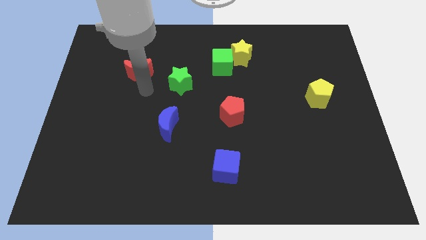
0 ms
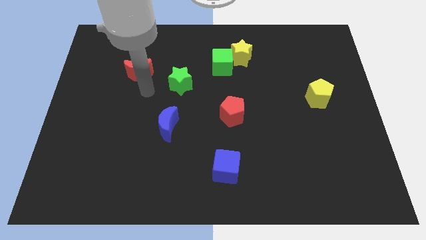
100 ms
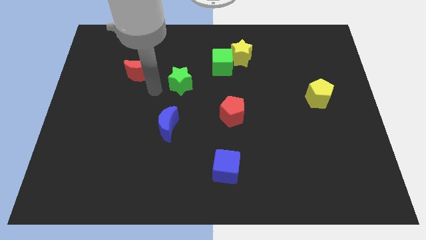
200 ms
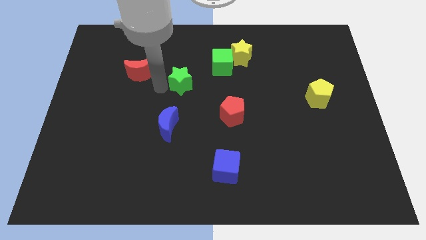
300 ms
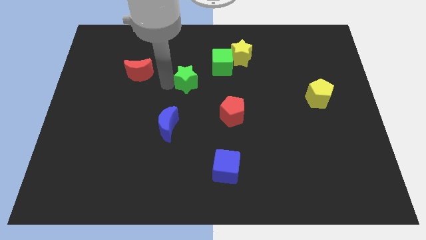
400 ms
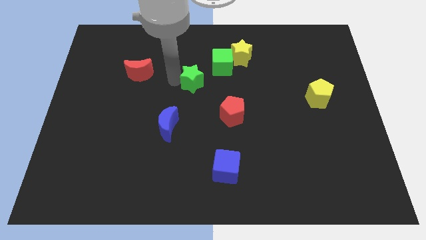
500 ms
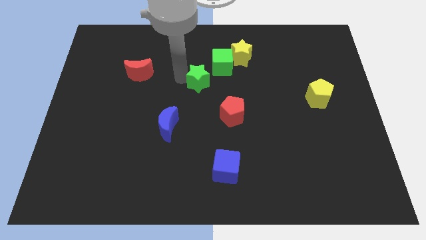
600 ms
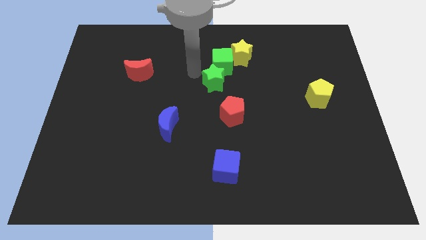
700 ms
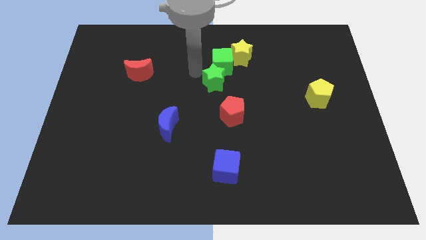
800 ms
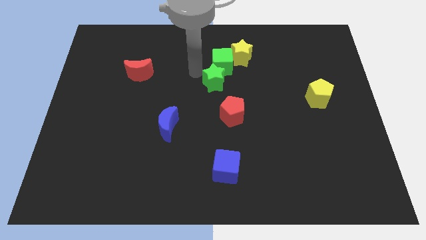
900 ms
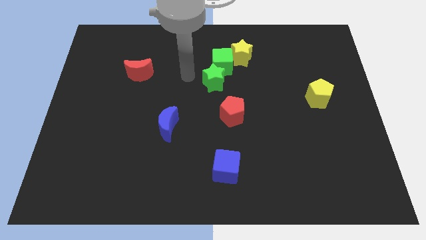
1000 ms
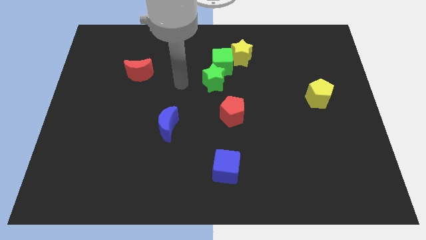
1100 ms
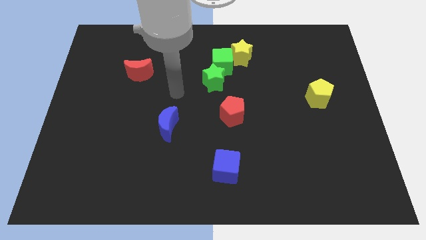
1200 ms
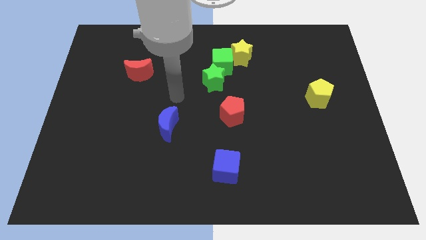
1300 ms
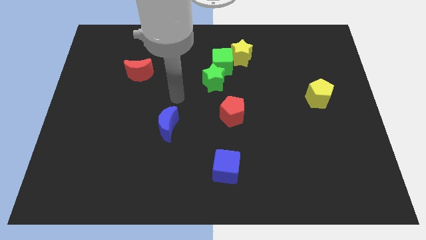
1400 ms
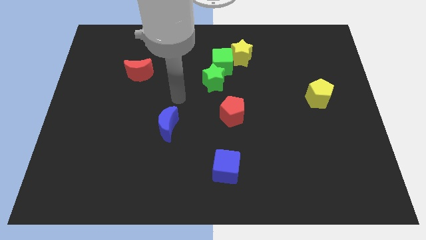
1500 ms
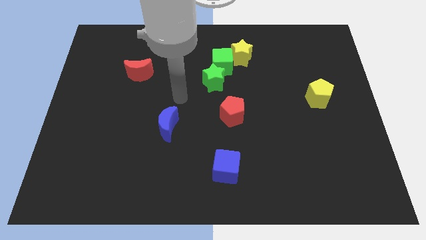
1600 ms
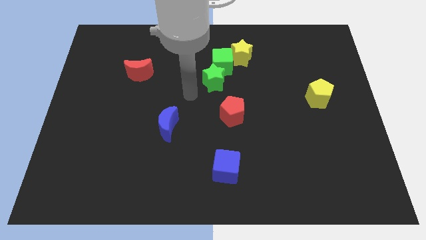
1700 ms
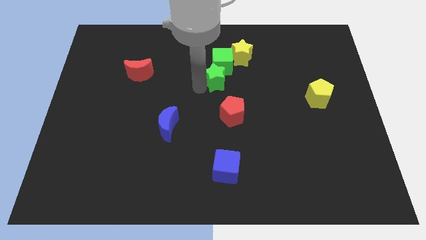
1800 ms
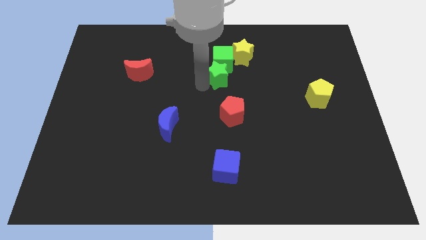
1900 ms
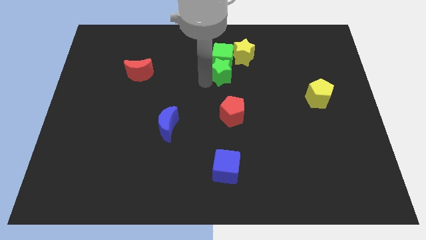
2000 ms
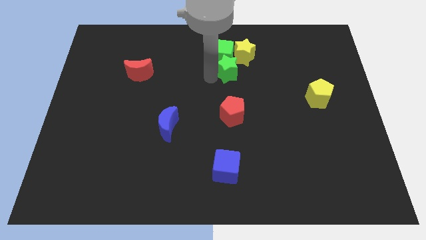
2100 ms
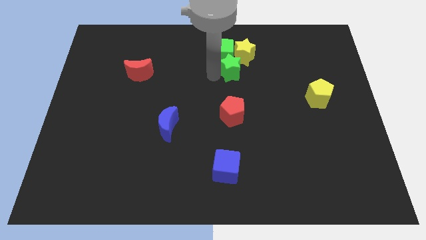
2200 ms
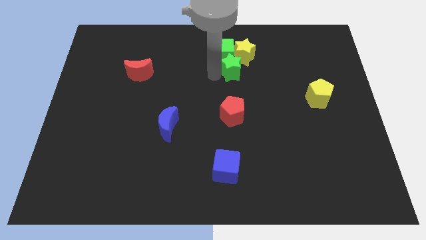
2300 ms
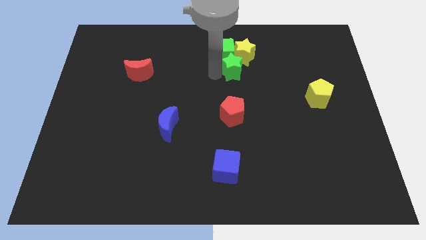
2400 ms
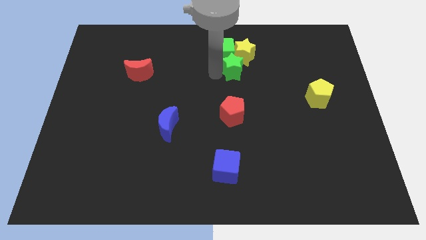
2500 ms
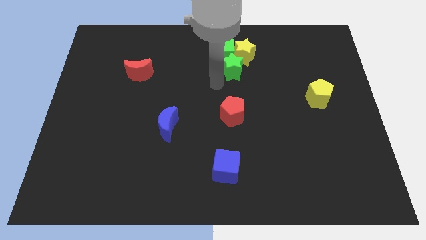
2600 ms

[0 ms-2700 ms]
push the green star into a group of blocks

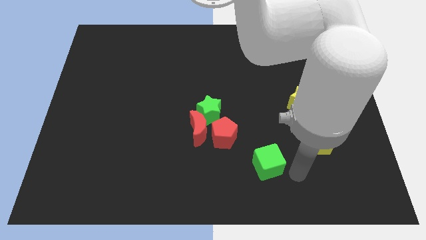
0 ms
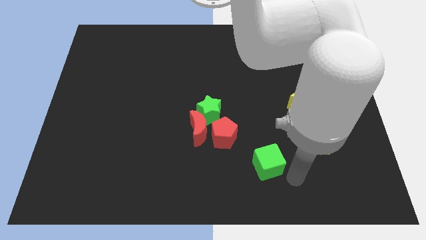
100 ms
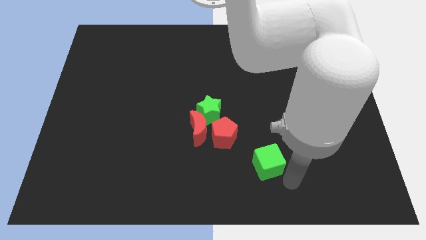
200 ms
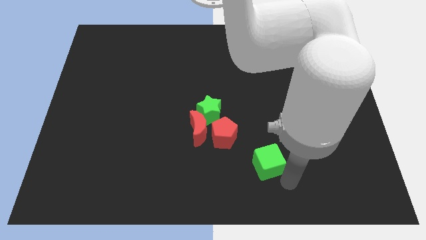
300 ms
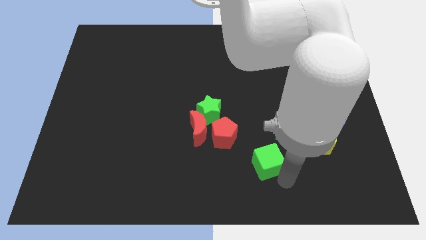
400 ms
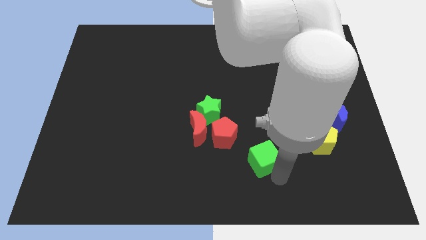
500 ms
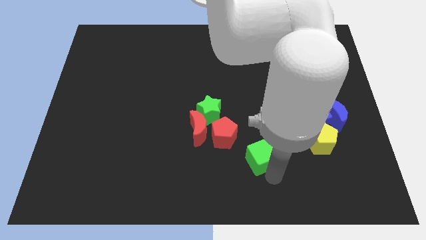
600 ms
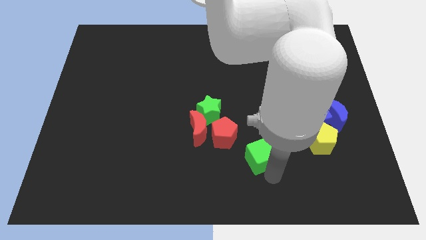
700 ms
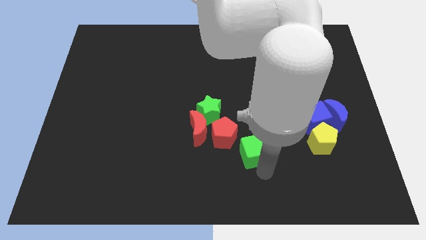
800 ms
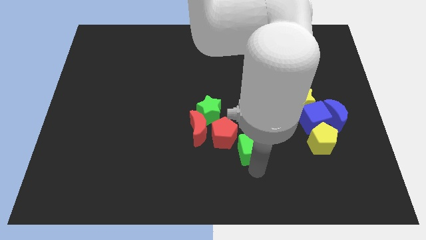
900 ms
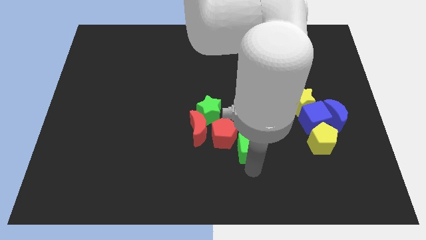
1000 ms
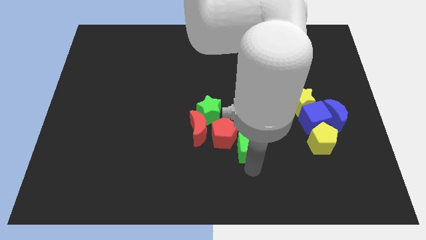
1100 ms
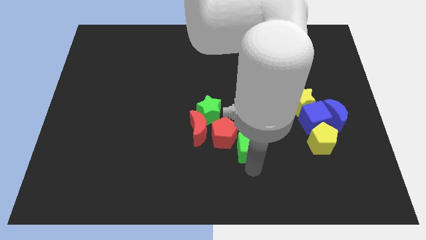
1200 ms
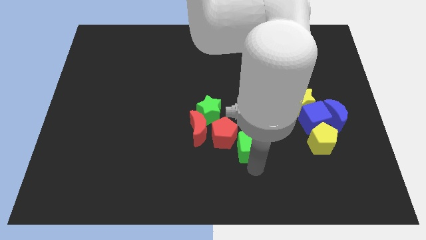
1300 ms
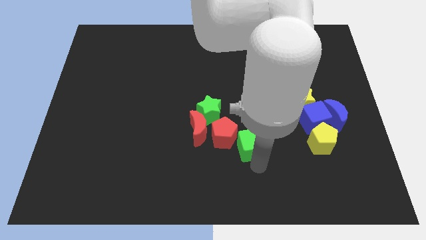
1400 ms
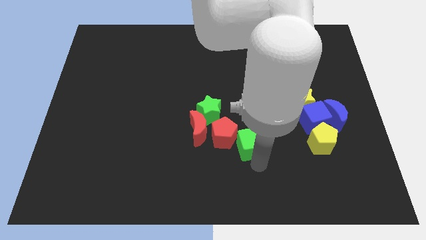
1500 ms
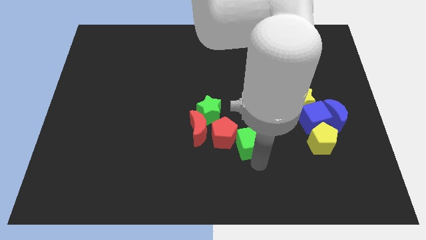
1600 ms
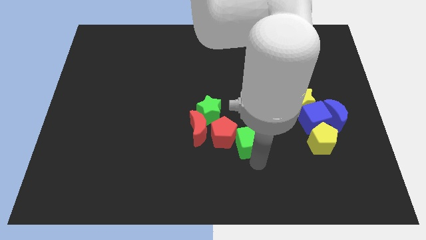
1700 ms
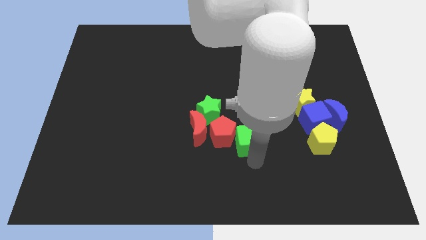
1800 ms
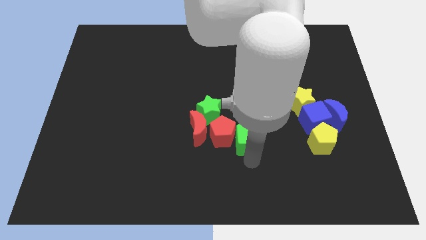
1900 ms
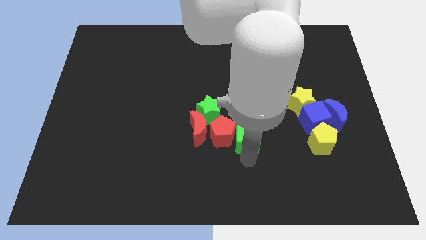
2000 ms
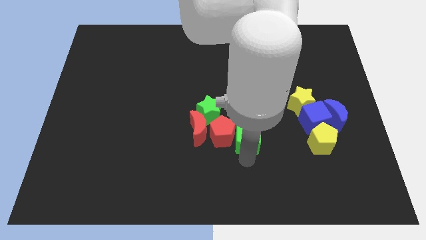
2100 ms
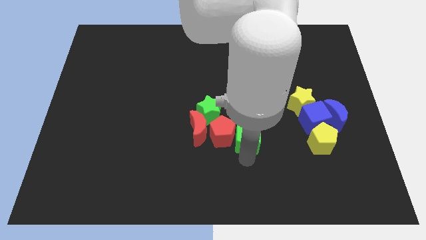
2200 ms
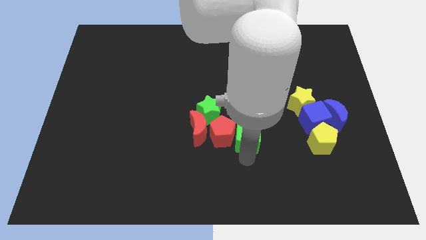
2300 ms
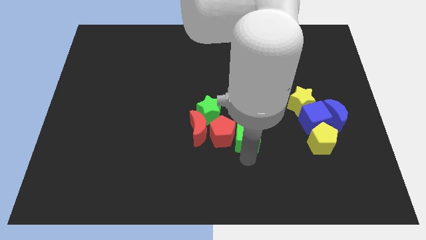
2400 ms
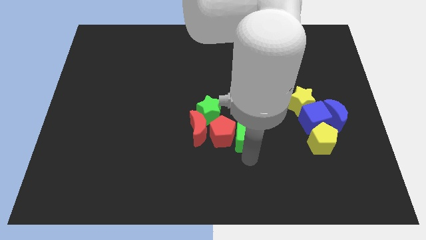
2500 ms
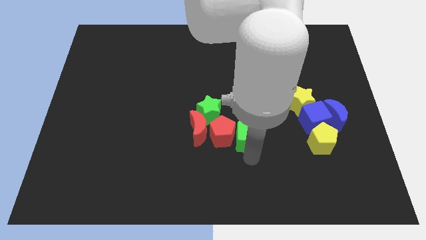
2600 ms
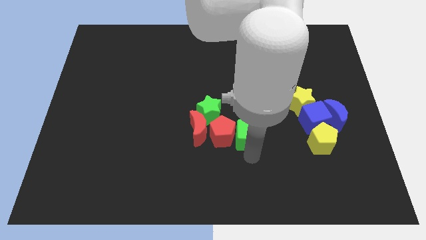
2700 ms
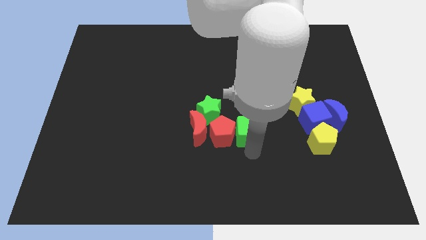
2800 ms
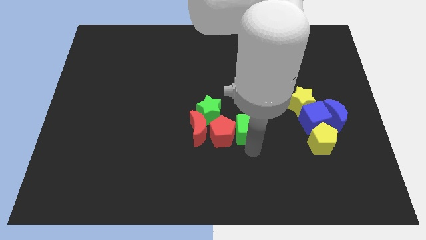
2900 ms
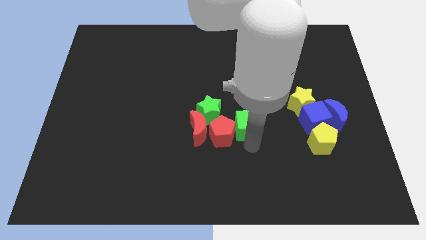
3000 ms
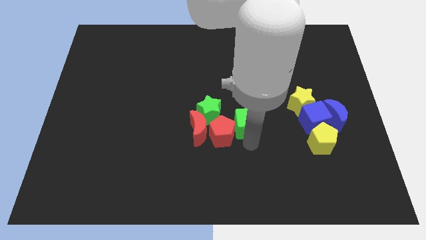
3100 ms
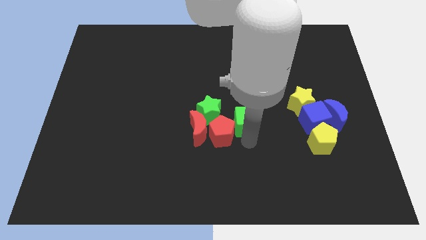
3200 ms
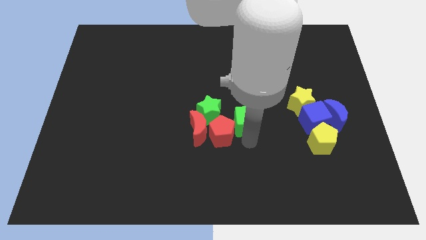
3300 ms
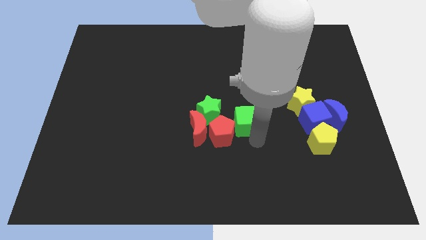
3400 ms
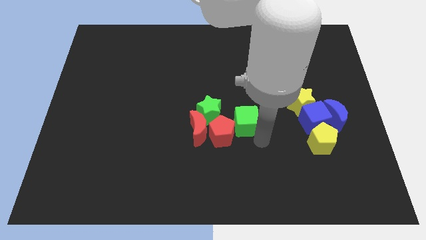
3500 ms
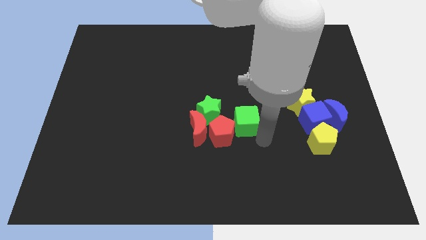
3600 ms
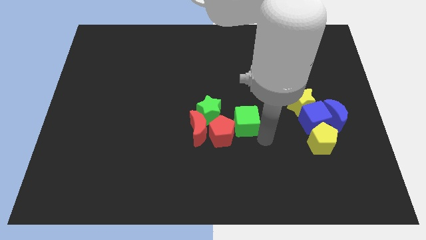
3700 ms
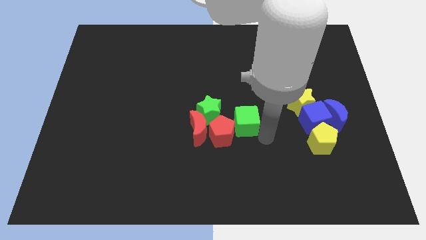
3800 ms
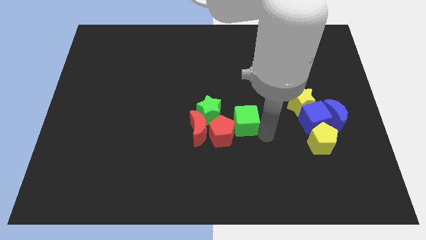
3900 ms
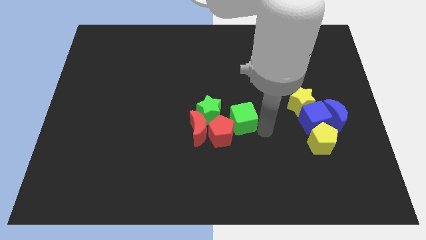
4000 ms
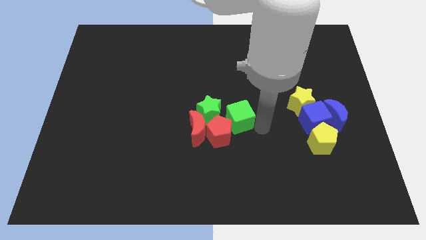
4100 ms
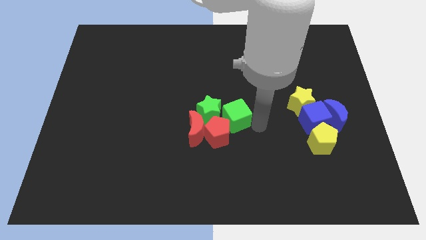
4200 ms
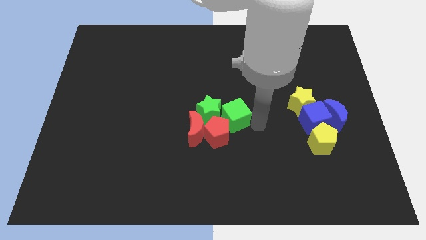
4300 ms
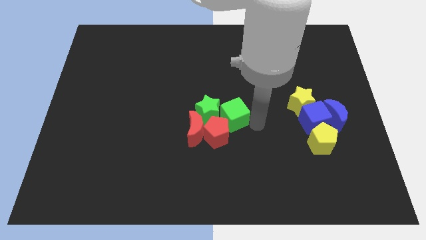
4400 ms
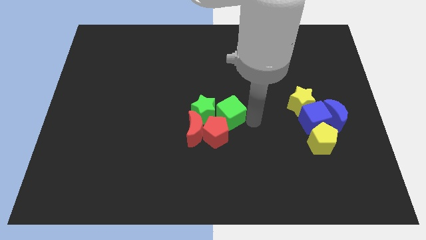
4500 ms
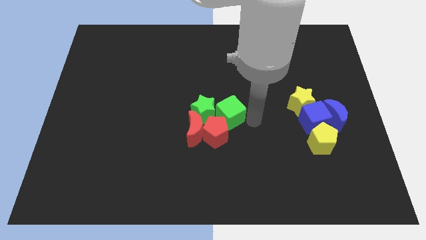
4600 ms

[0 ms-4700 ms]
place the green cube to the right of the green star

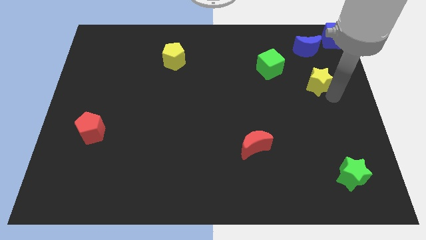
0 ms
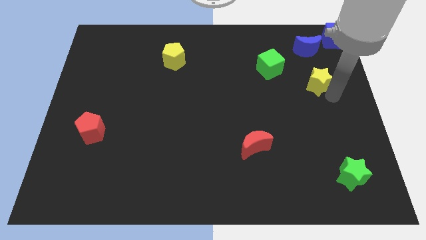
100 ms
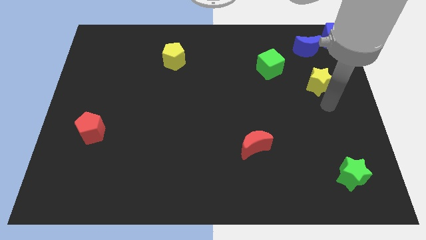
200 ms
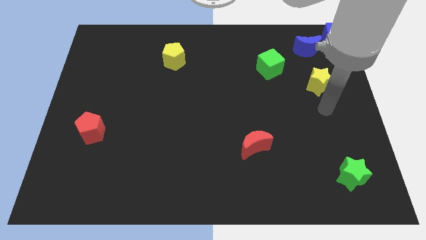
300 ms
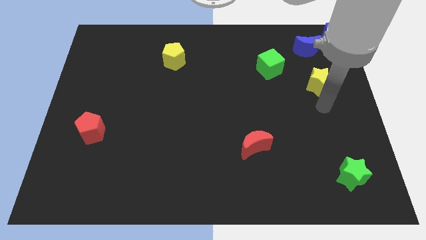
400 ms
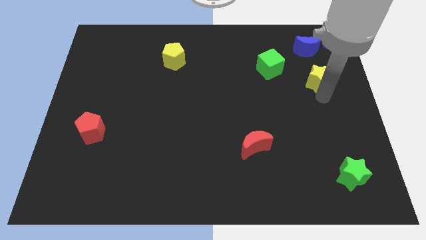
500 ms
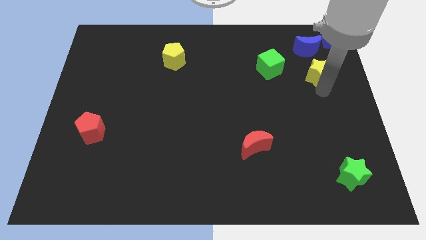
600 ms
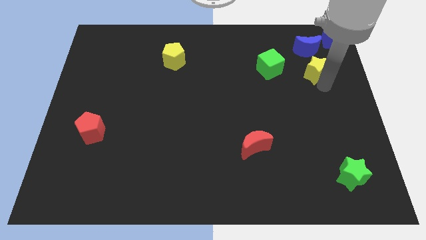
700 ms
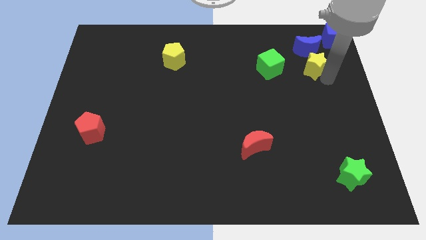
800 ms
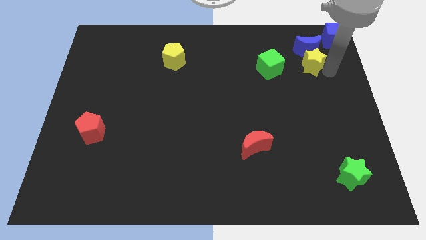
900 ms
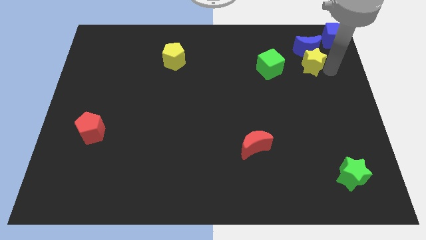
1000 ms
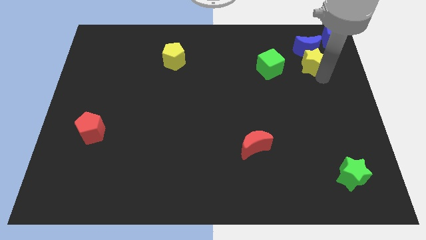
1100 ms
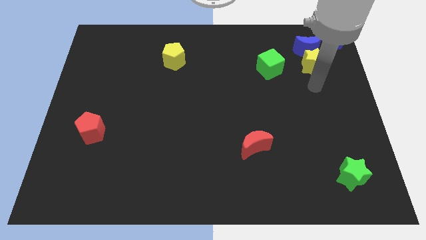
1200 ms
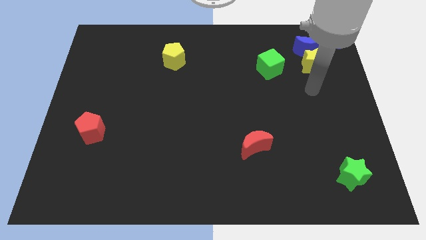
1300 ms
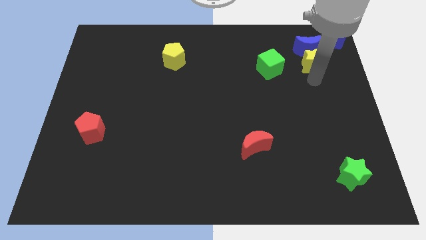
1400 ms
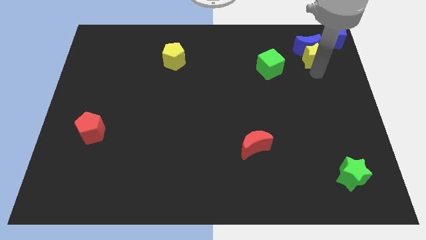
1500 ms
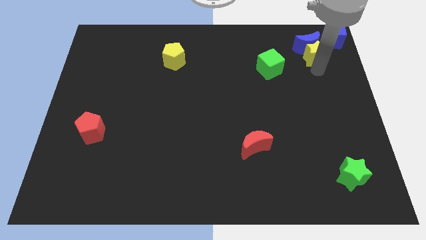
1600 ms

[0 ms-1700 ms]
push the yellow star into the blue crescent
